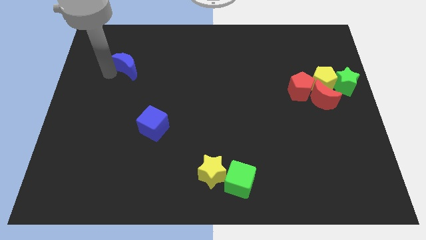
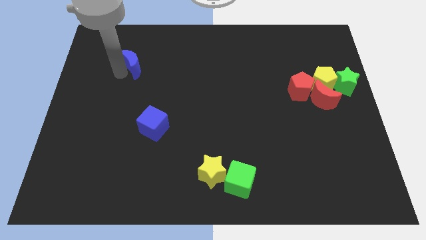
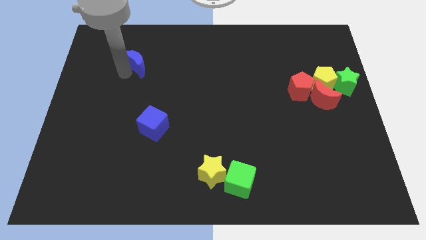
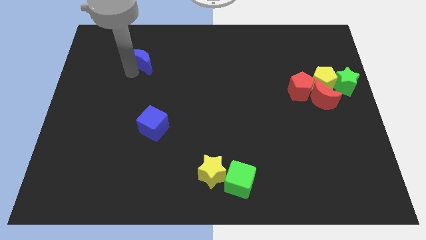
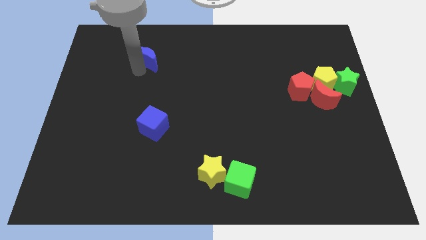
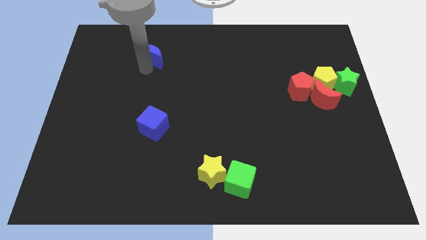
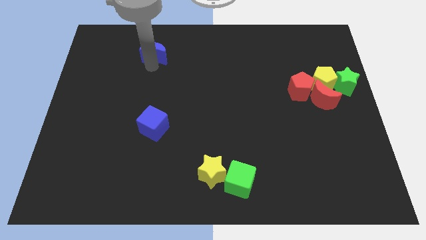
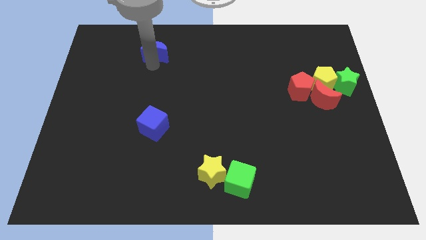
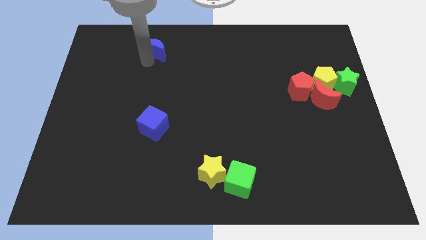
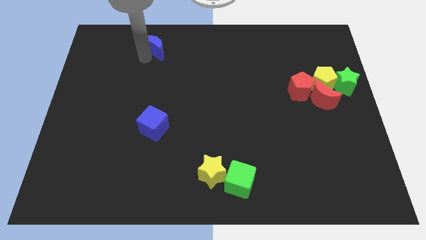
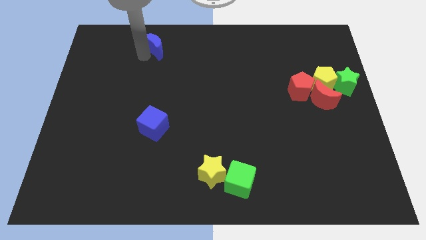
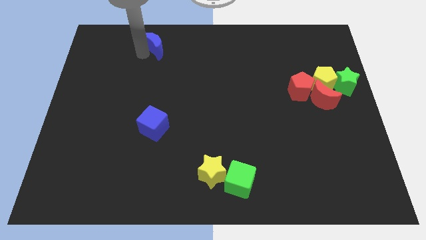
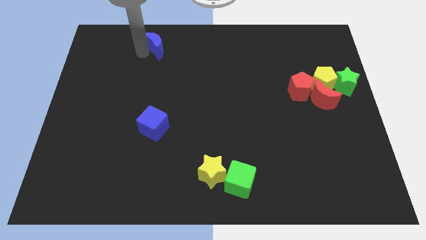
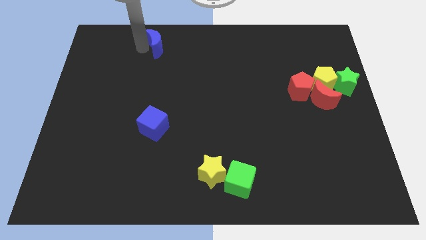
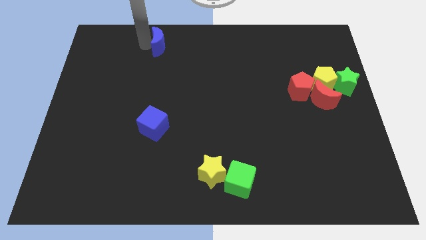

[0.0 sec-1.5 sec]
place blue crescent above blue cube

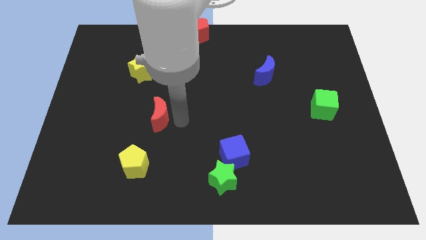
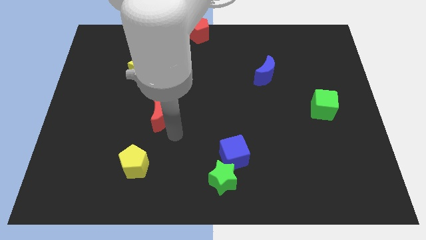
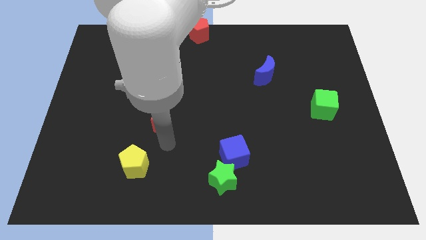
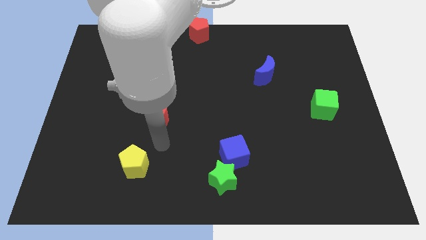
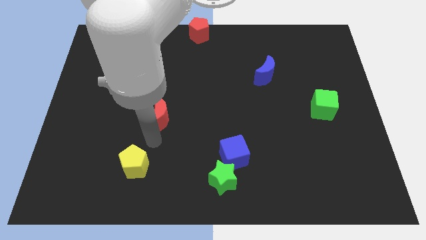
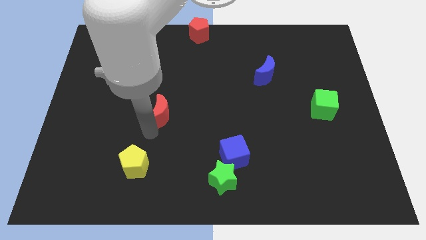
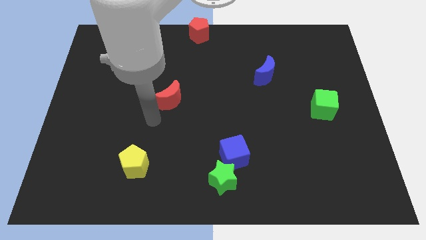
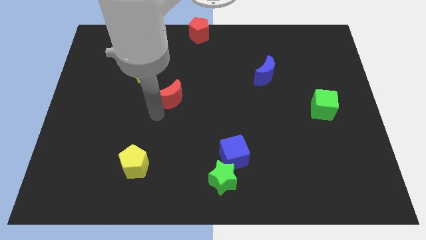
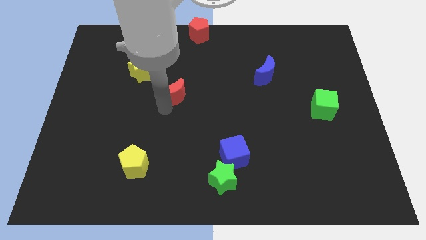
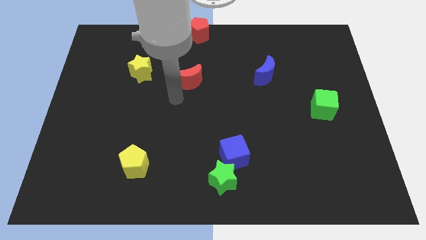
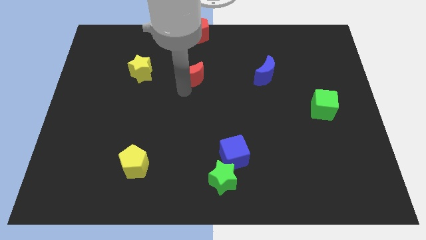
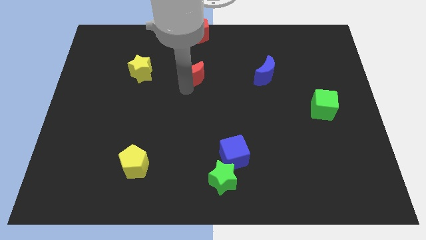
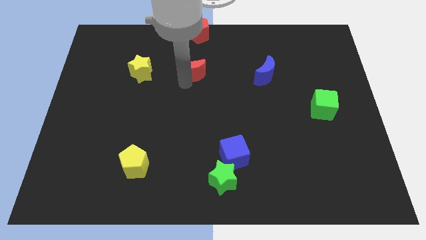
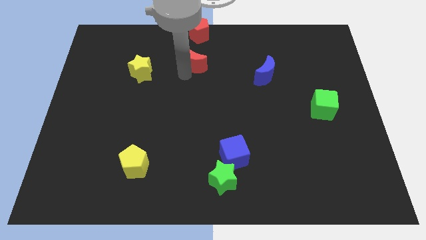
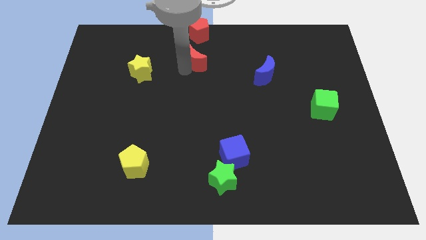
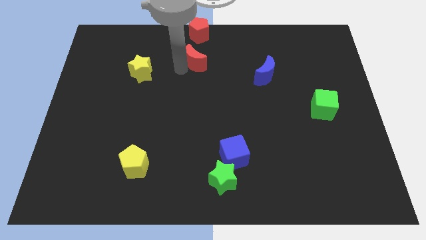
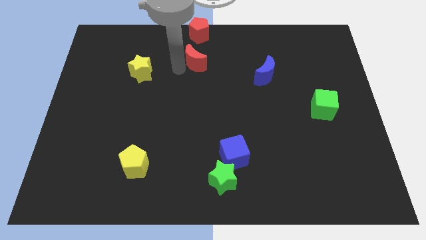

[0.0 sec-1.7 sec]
move the red moon down to the red pentagon

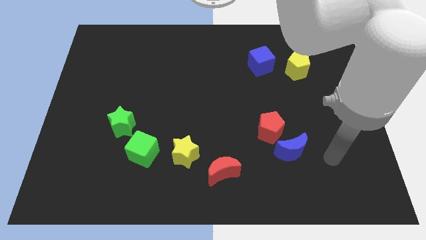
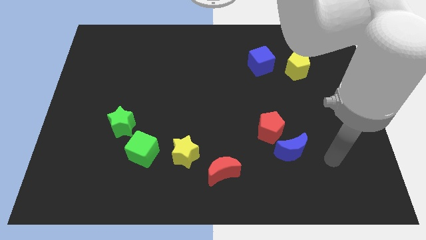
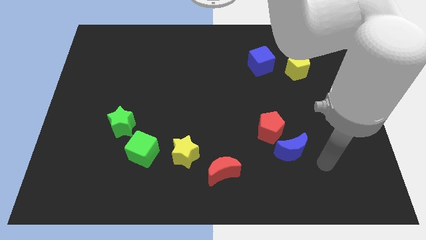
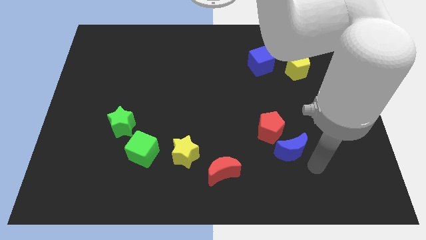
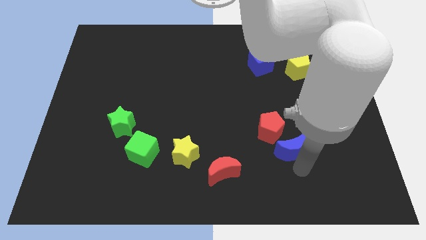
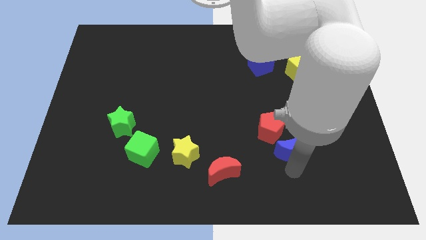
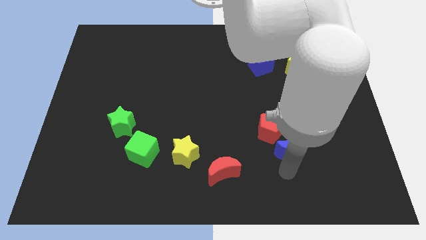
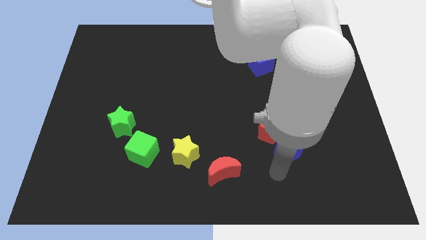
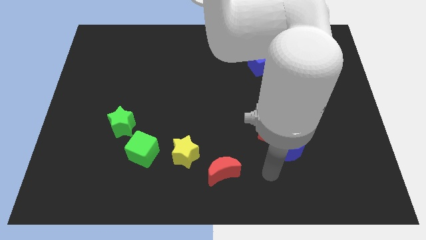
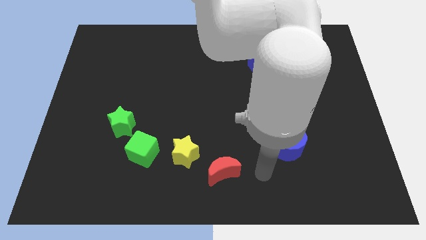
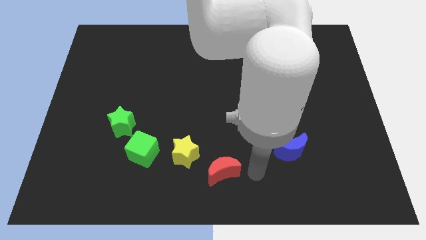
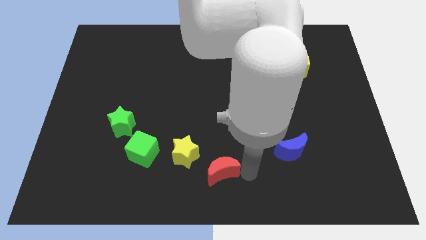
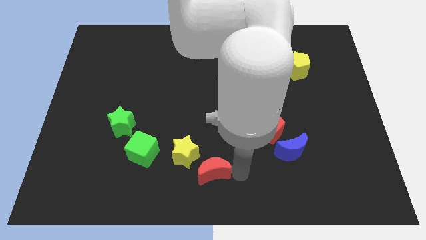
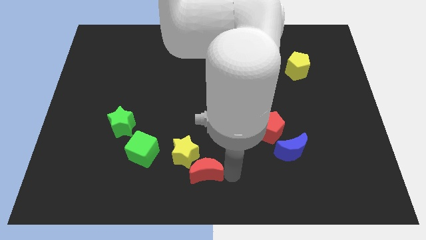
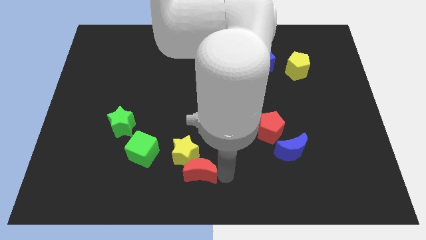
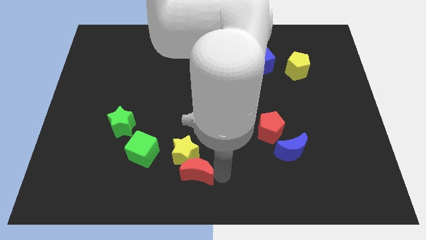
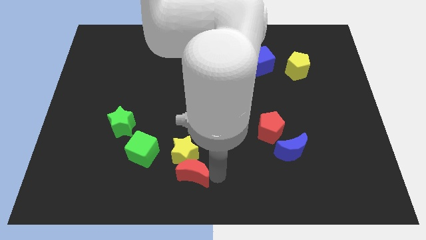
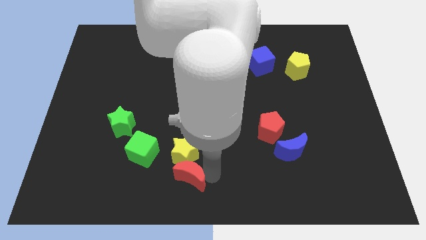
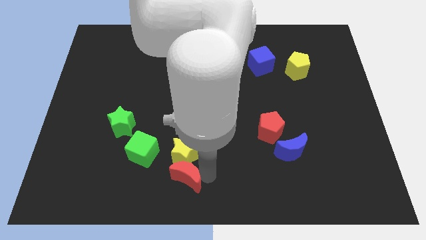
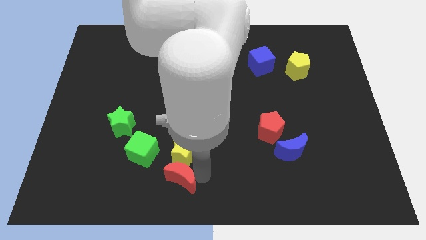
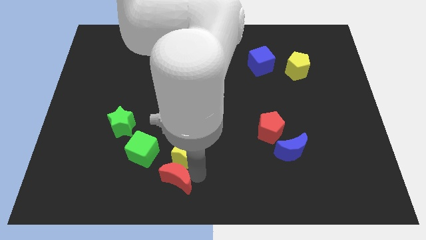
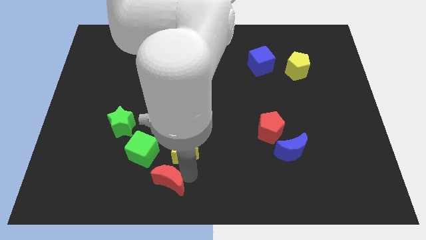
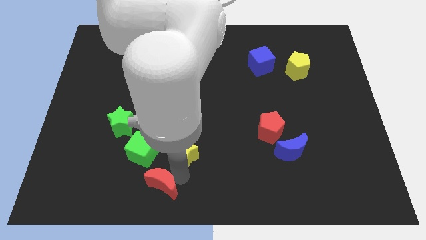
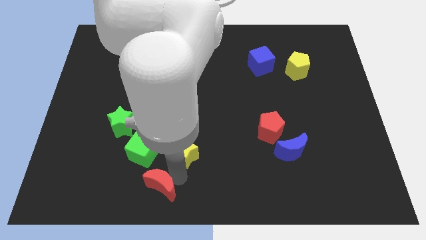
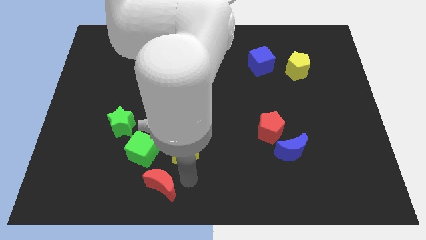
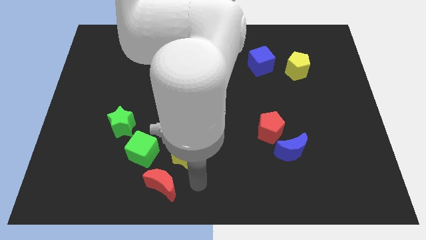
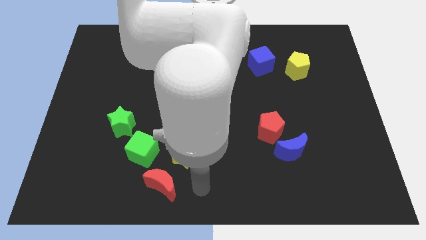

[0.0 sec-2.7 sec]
move the red crescent towards the green cube

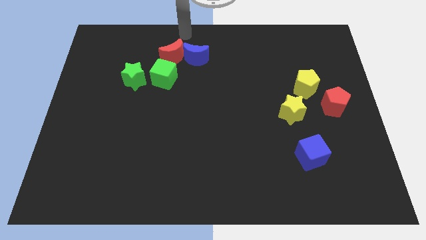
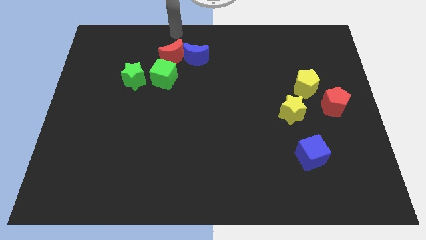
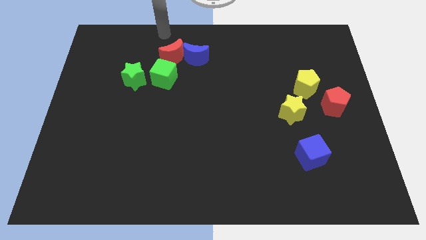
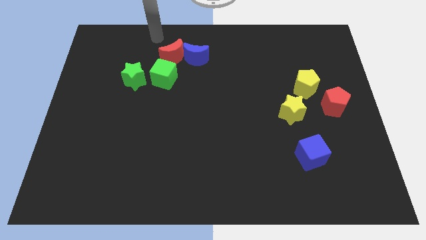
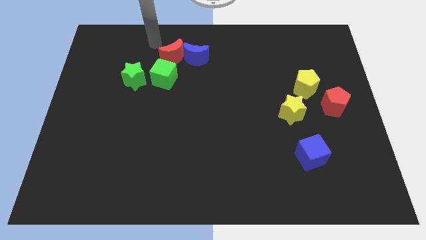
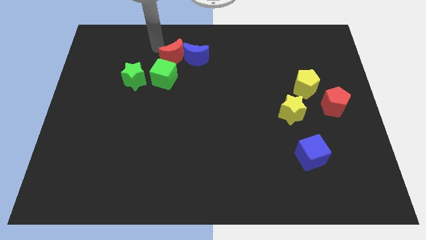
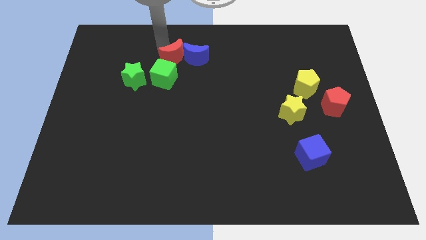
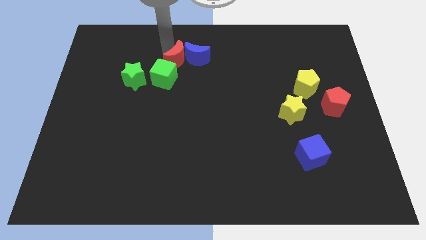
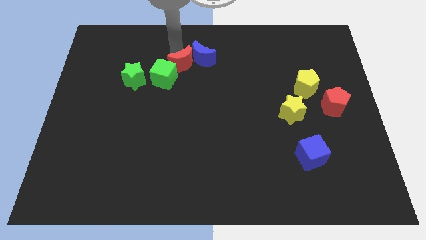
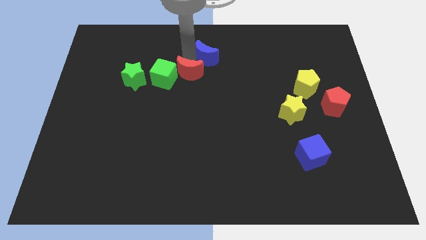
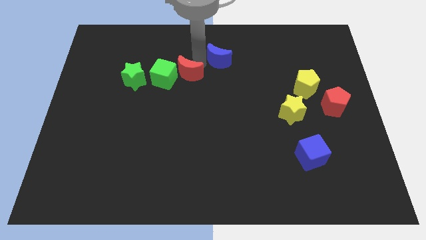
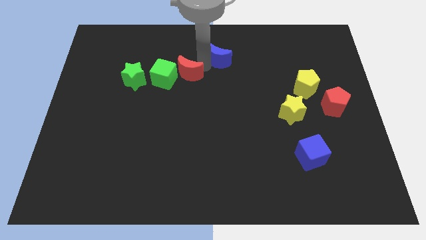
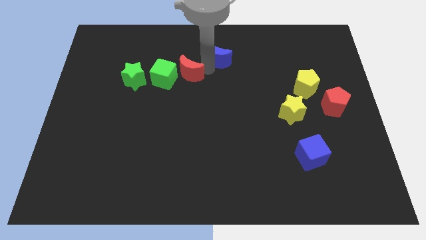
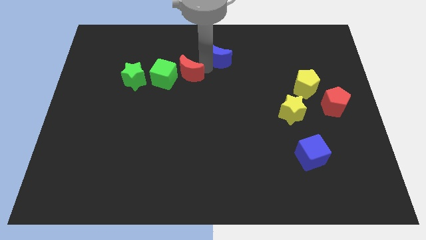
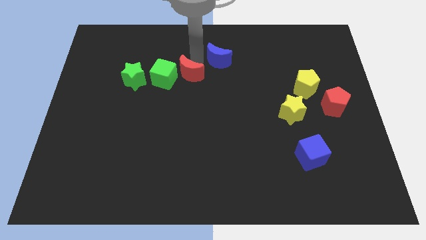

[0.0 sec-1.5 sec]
push the red crescent along with blue crescent

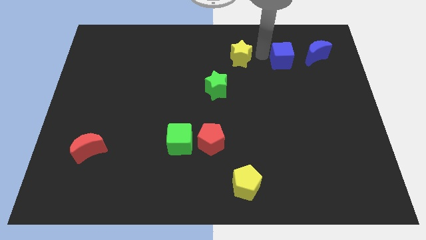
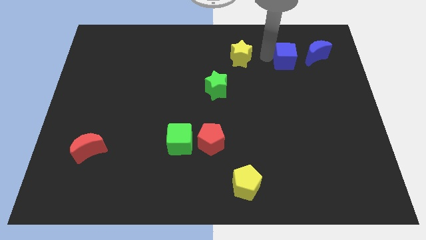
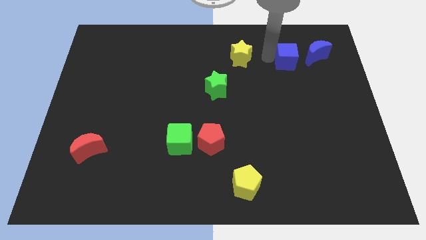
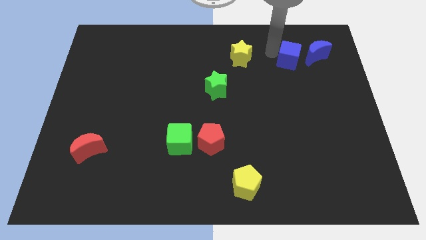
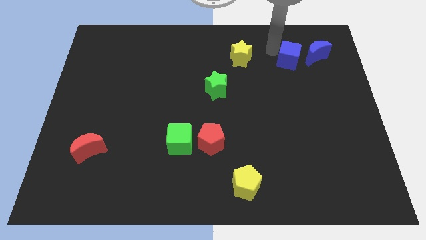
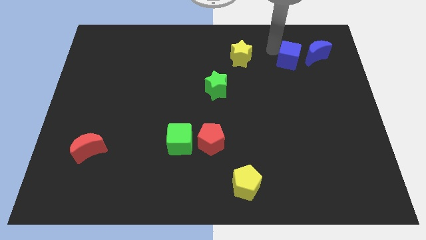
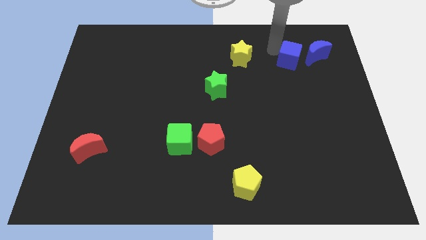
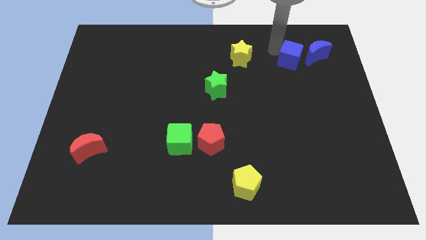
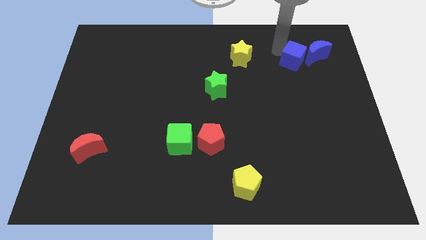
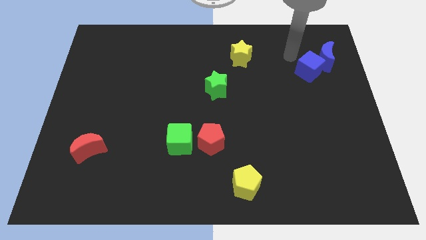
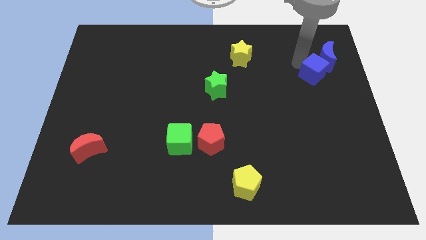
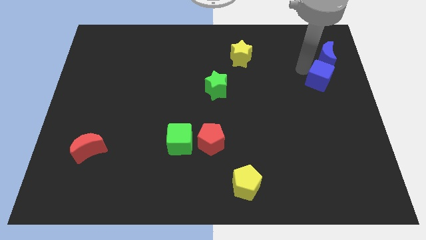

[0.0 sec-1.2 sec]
push the blue cube towards the blue moon

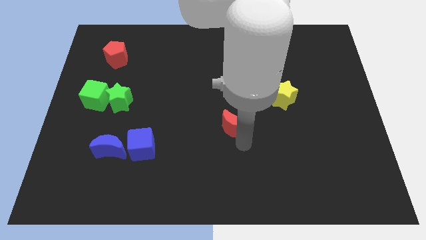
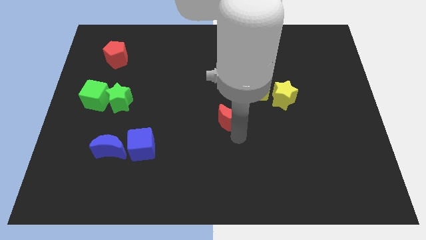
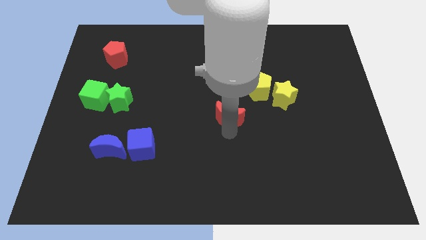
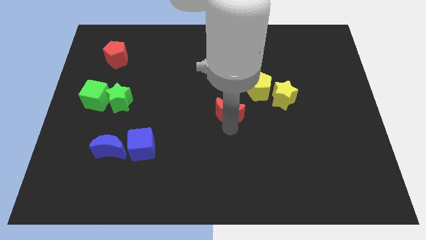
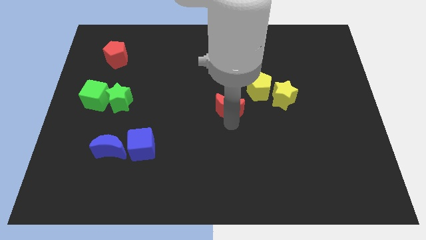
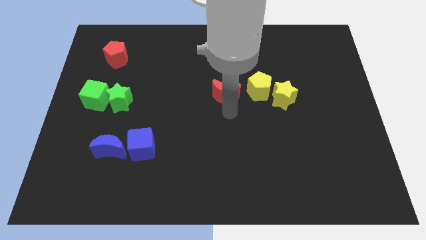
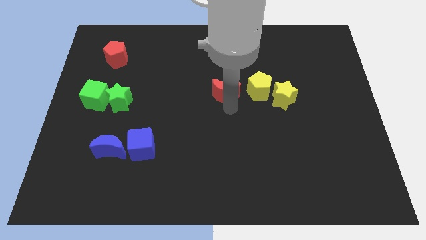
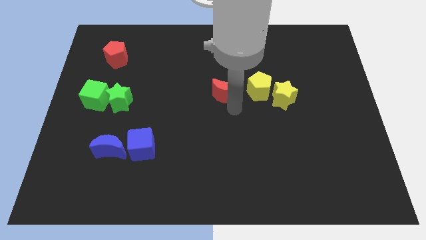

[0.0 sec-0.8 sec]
place the red moon left to the yellow pentagon
